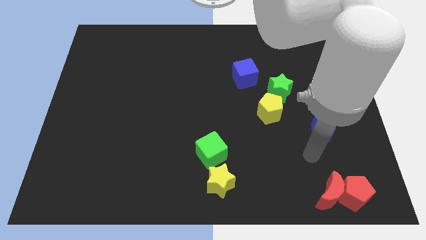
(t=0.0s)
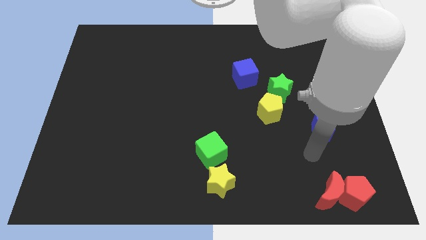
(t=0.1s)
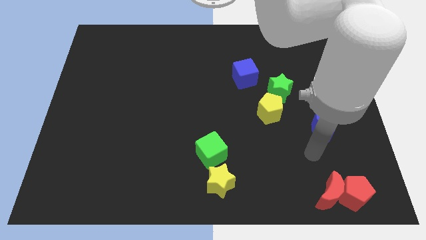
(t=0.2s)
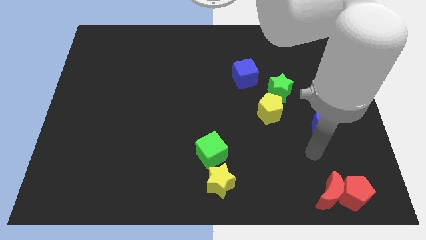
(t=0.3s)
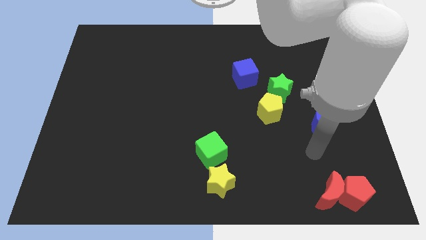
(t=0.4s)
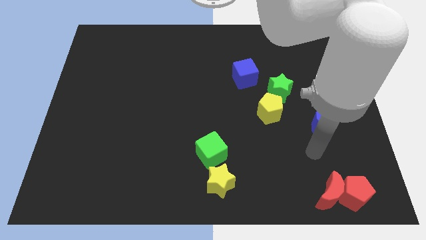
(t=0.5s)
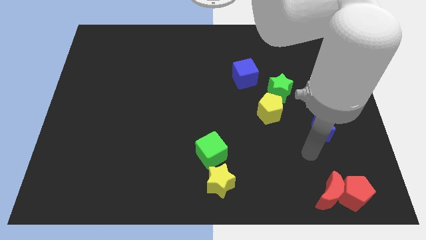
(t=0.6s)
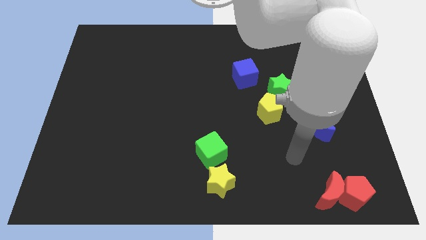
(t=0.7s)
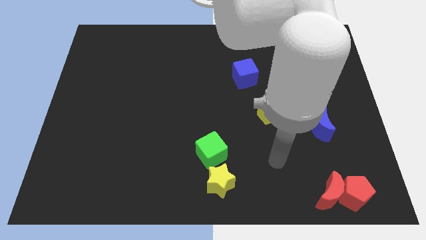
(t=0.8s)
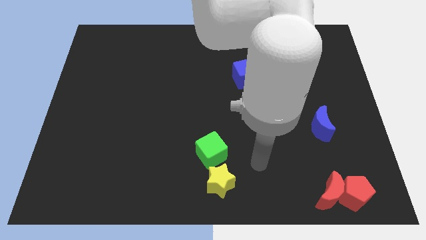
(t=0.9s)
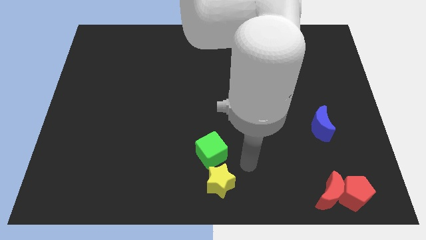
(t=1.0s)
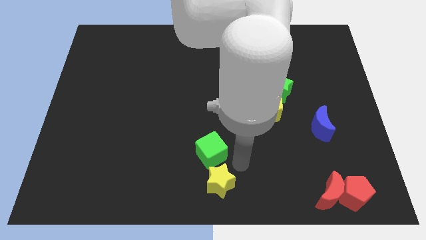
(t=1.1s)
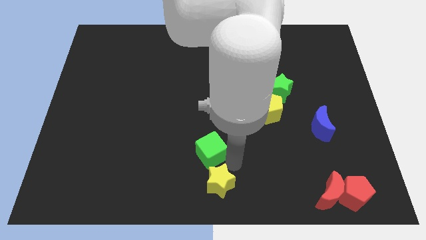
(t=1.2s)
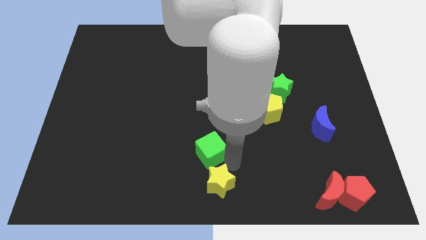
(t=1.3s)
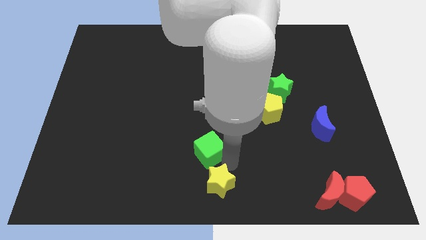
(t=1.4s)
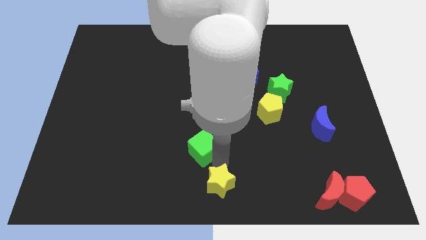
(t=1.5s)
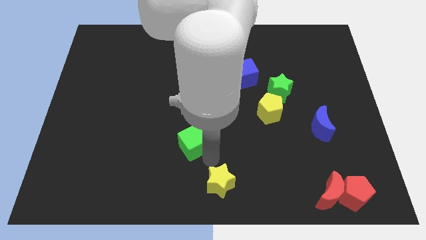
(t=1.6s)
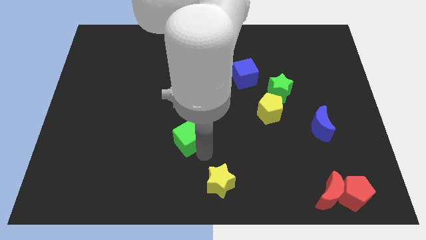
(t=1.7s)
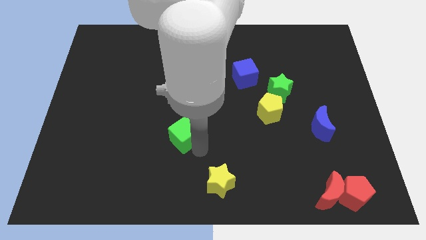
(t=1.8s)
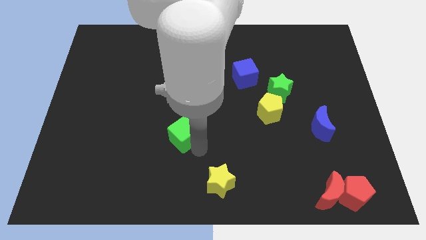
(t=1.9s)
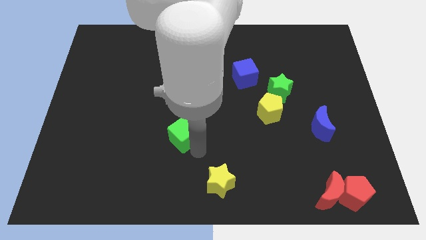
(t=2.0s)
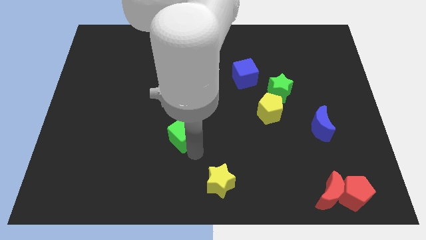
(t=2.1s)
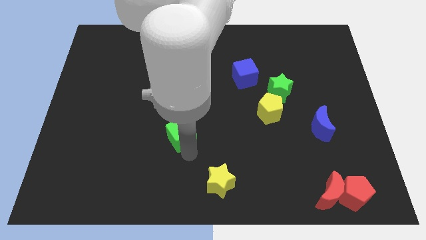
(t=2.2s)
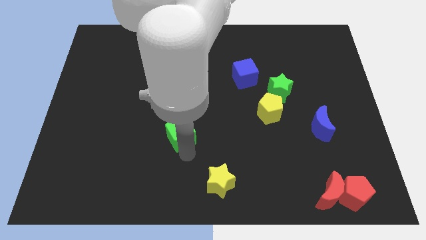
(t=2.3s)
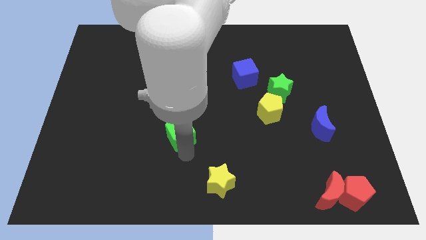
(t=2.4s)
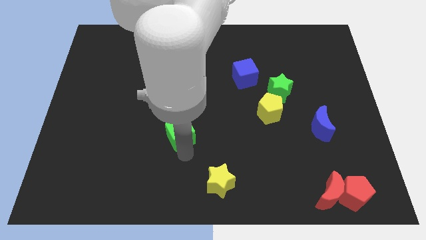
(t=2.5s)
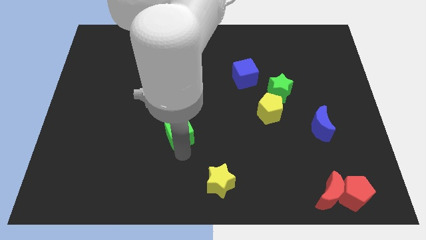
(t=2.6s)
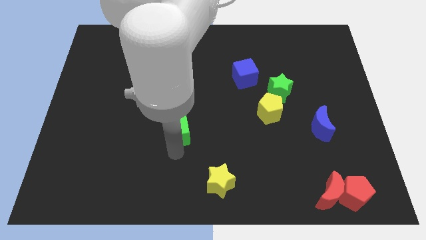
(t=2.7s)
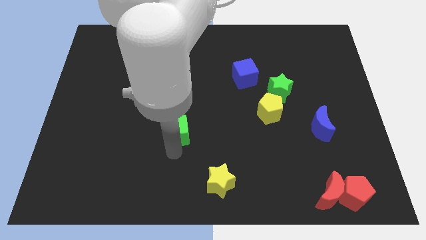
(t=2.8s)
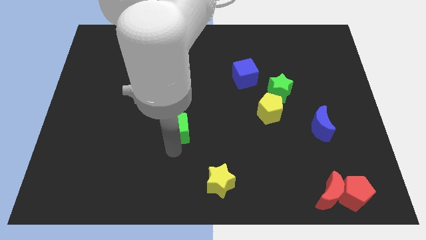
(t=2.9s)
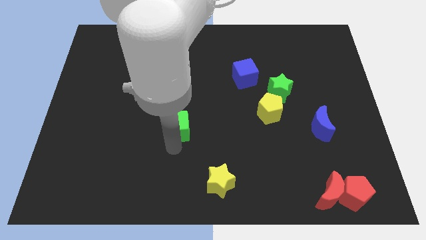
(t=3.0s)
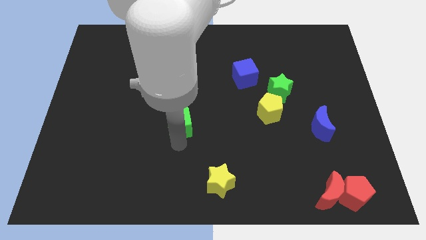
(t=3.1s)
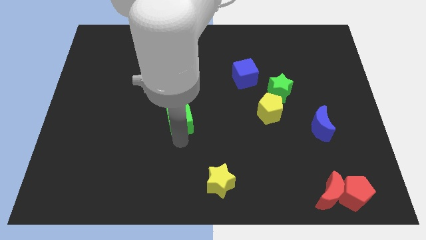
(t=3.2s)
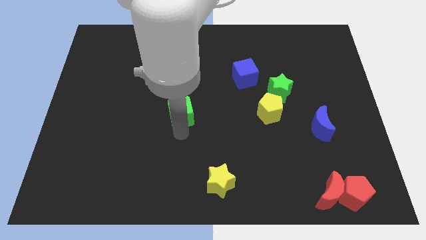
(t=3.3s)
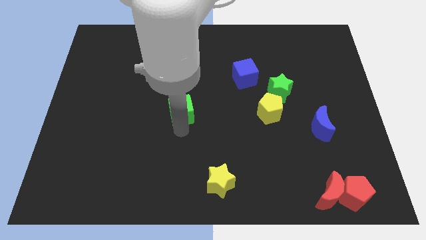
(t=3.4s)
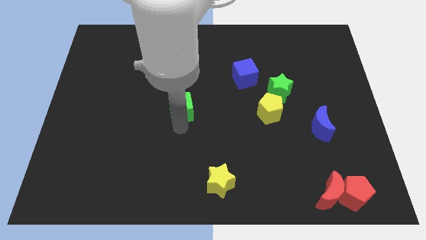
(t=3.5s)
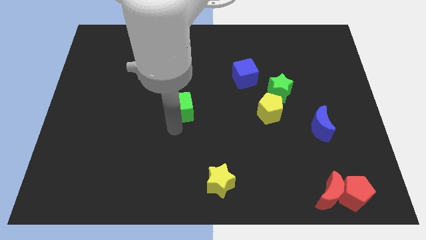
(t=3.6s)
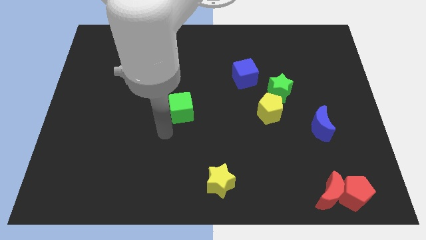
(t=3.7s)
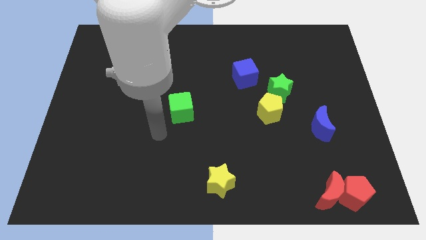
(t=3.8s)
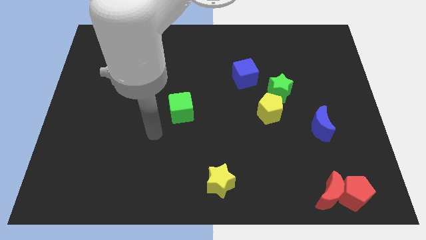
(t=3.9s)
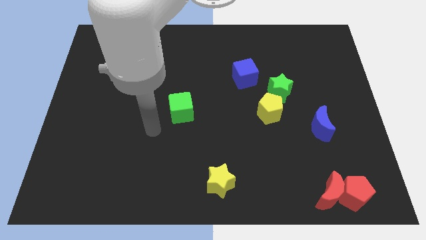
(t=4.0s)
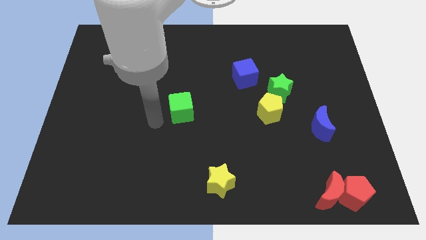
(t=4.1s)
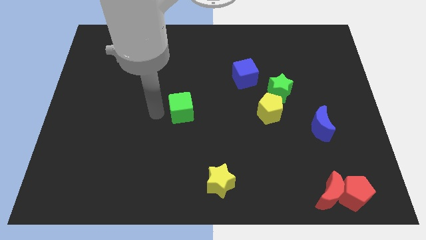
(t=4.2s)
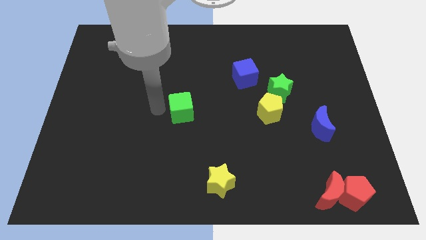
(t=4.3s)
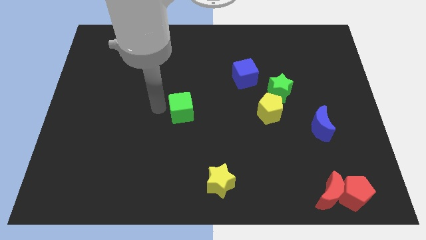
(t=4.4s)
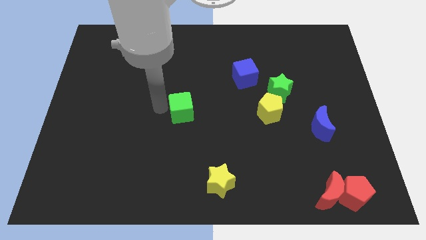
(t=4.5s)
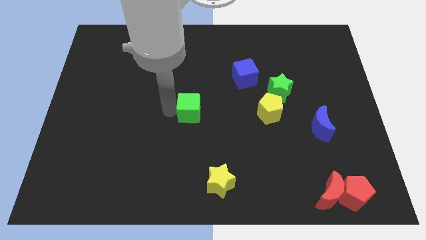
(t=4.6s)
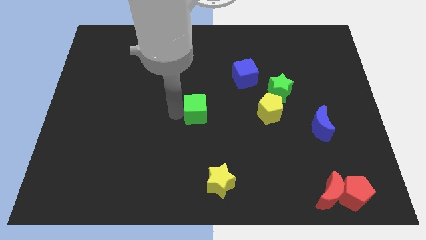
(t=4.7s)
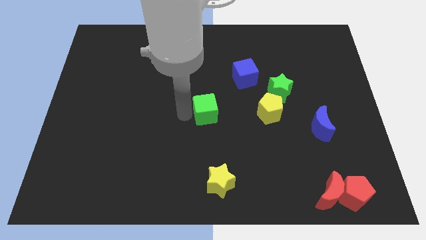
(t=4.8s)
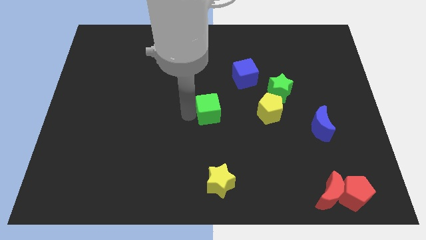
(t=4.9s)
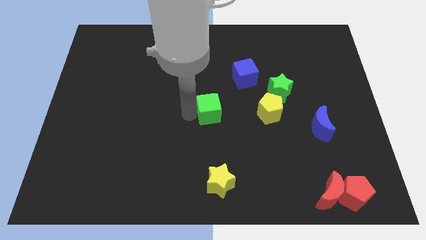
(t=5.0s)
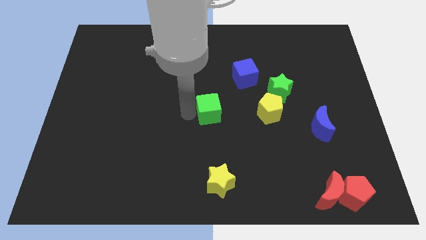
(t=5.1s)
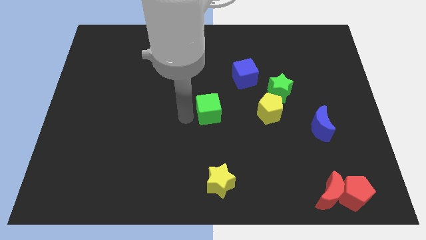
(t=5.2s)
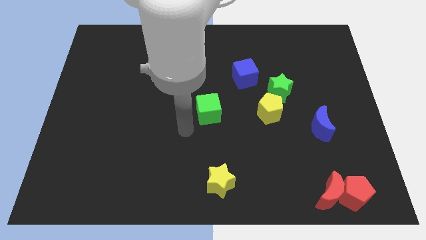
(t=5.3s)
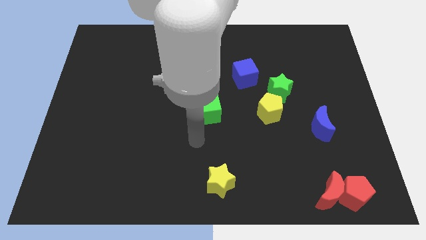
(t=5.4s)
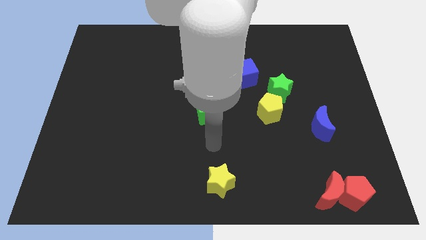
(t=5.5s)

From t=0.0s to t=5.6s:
move the green cube to the middle of the board

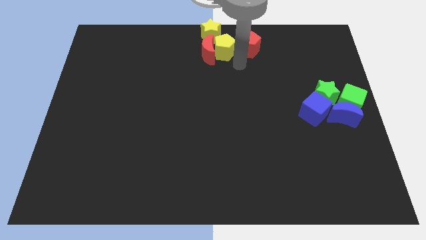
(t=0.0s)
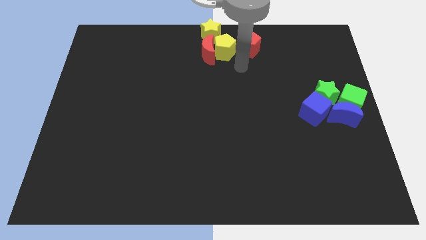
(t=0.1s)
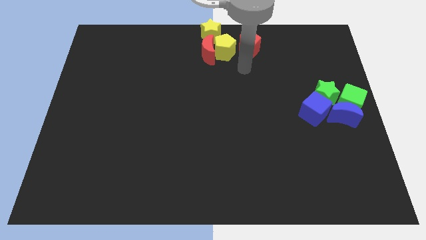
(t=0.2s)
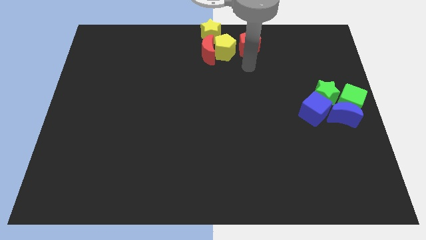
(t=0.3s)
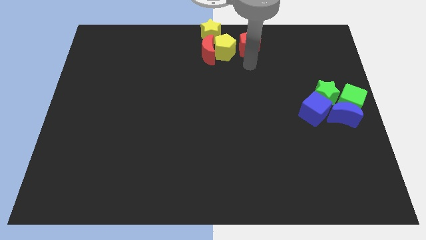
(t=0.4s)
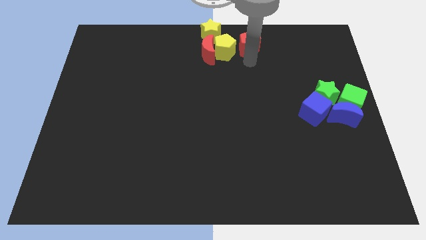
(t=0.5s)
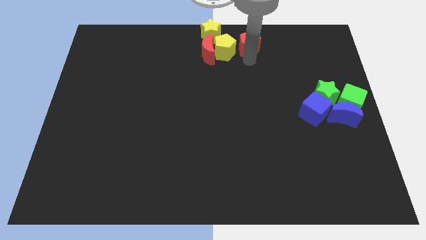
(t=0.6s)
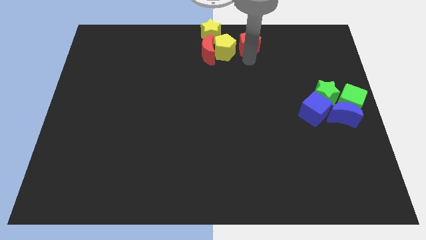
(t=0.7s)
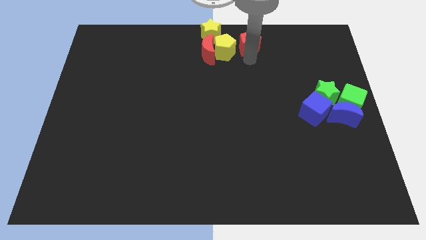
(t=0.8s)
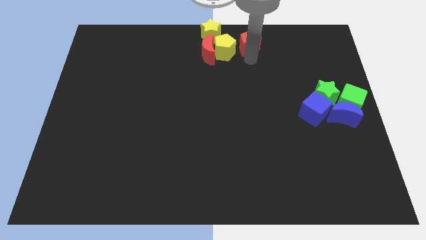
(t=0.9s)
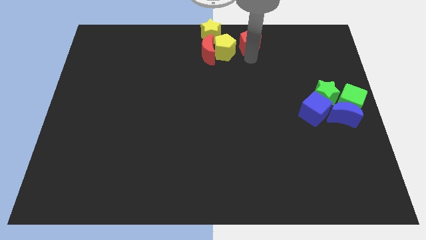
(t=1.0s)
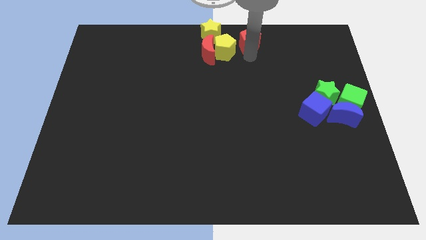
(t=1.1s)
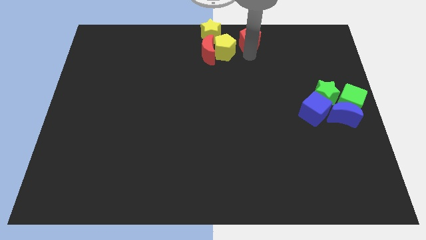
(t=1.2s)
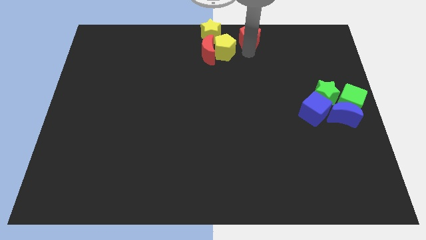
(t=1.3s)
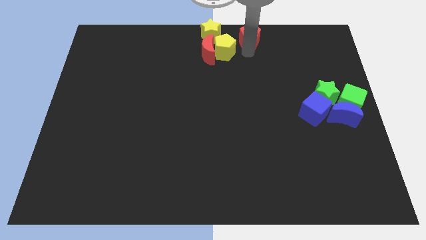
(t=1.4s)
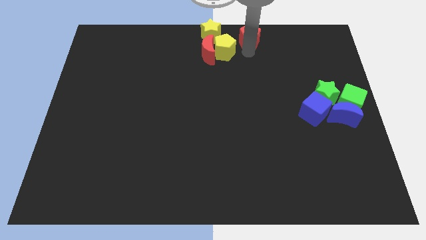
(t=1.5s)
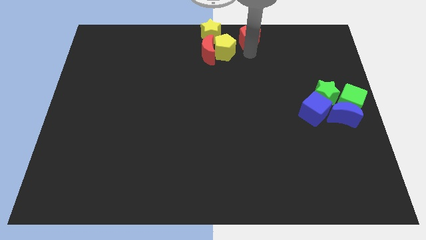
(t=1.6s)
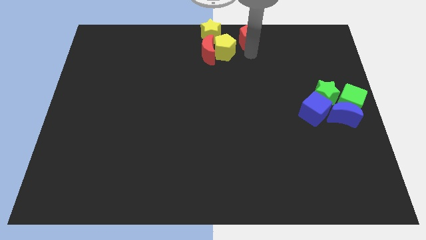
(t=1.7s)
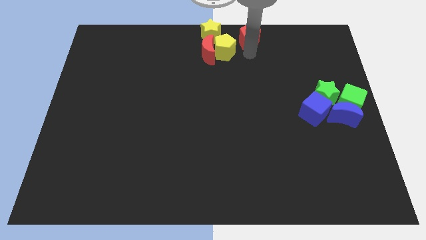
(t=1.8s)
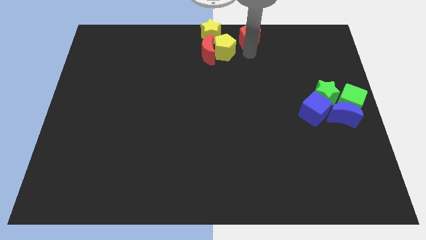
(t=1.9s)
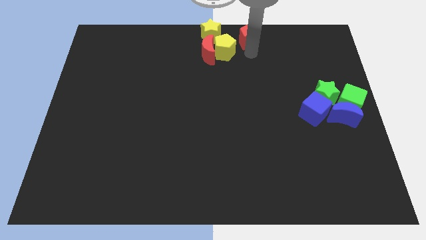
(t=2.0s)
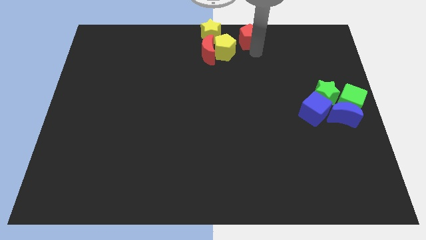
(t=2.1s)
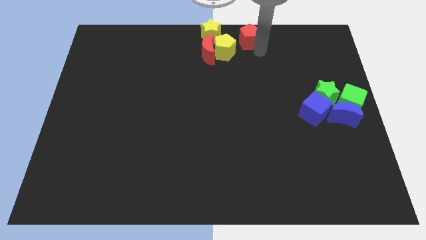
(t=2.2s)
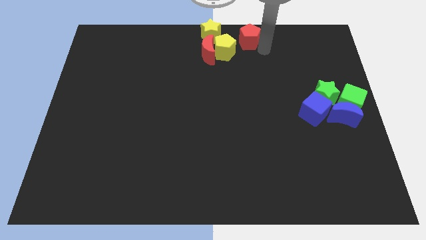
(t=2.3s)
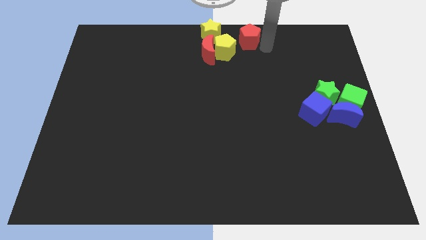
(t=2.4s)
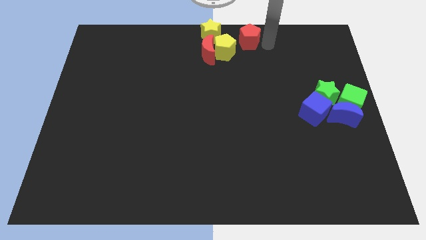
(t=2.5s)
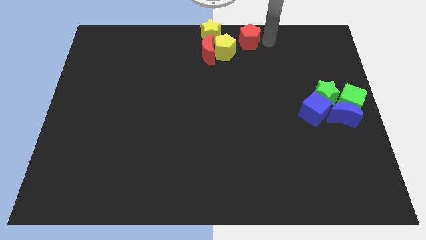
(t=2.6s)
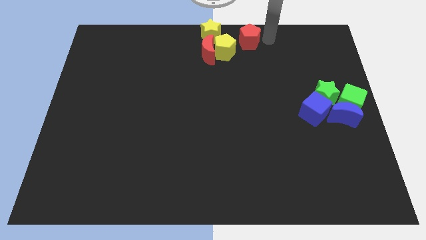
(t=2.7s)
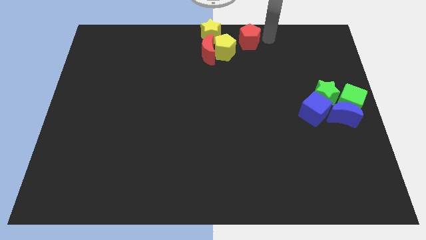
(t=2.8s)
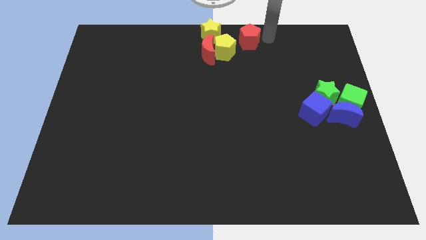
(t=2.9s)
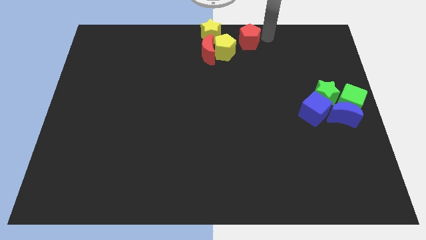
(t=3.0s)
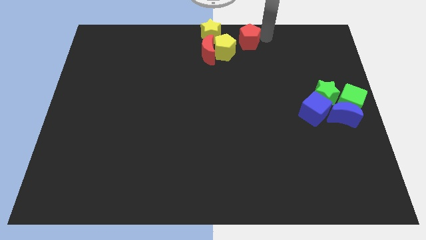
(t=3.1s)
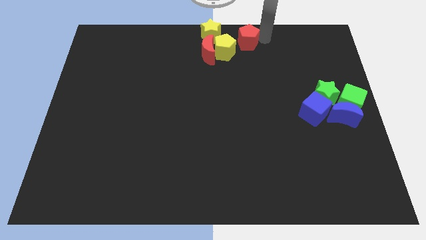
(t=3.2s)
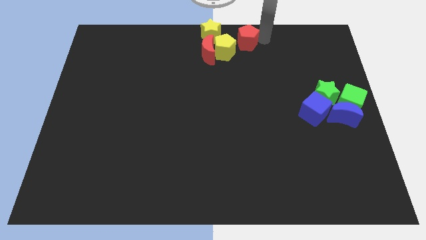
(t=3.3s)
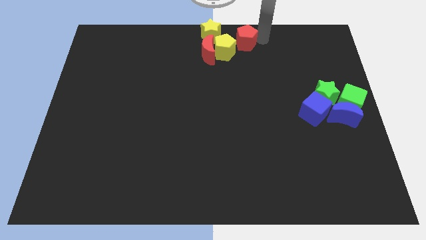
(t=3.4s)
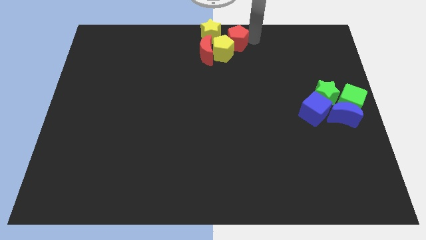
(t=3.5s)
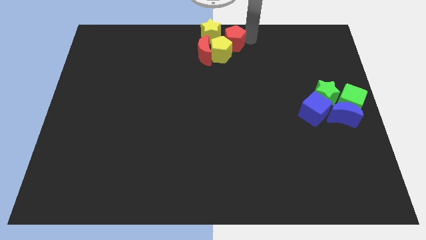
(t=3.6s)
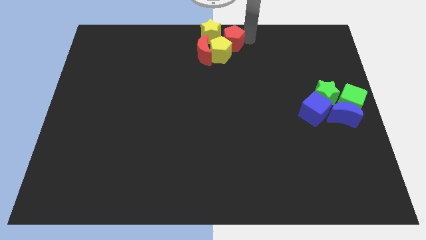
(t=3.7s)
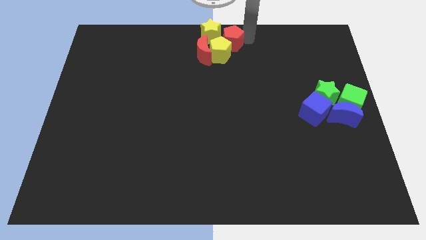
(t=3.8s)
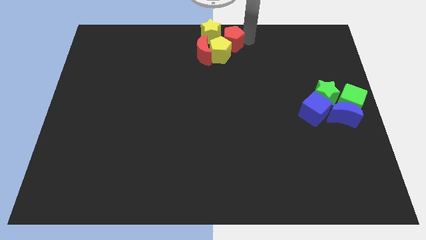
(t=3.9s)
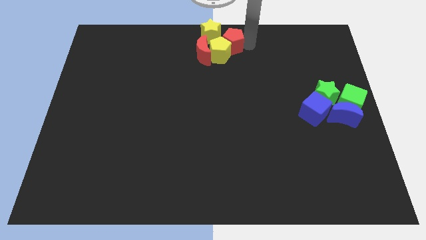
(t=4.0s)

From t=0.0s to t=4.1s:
put the red pentagon at the top center
